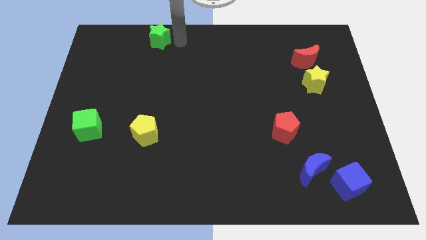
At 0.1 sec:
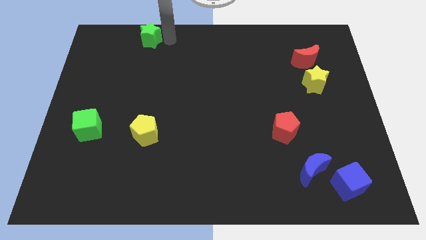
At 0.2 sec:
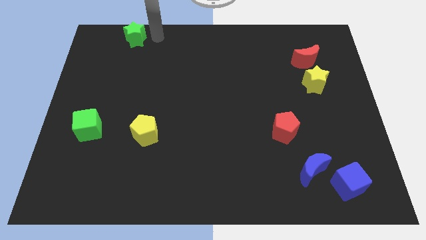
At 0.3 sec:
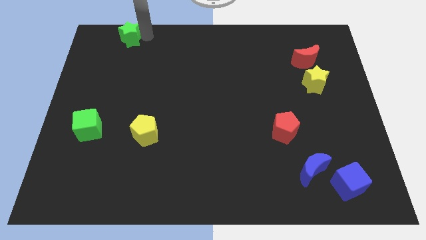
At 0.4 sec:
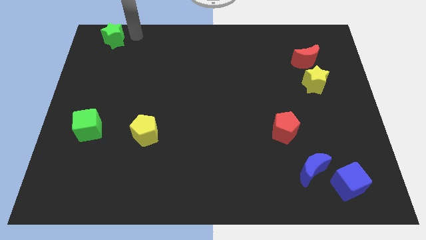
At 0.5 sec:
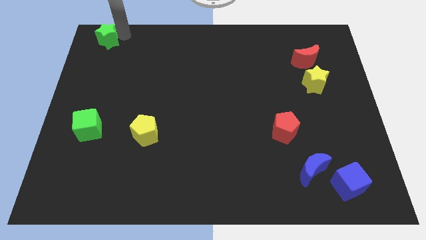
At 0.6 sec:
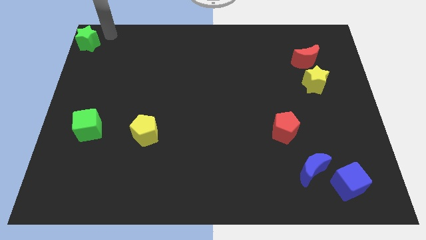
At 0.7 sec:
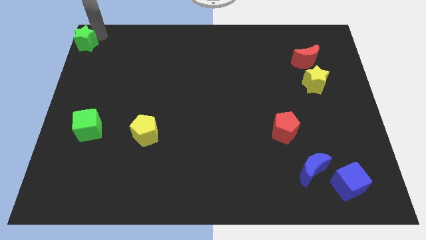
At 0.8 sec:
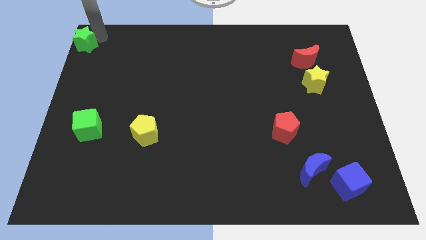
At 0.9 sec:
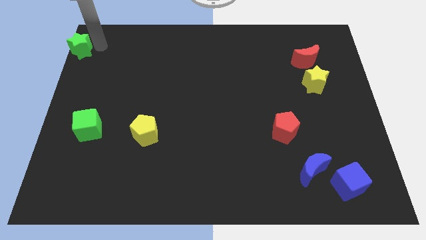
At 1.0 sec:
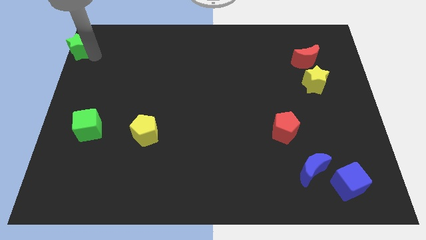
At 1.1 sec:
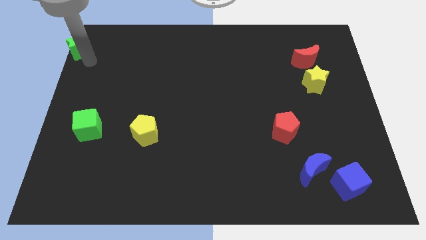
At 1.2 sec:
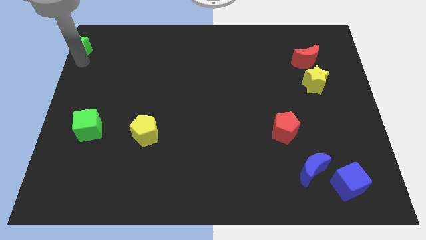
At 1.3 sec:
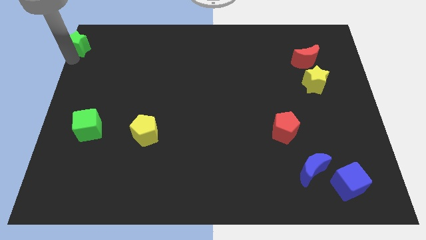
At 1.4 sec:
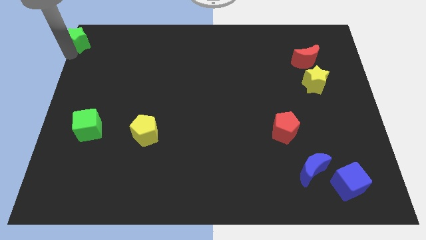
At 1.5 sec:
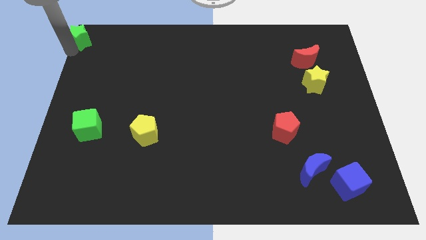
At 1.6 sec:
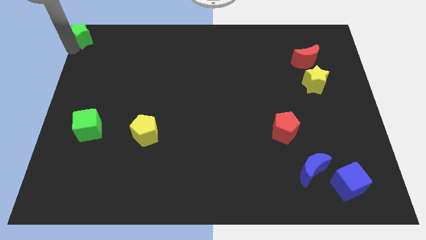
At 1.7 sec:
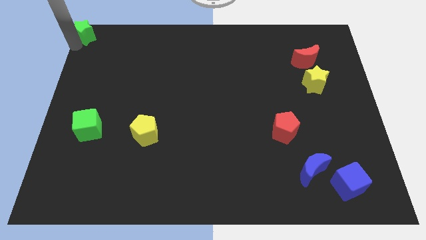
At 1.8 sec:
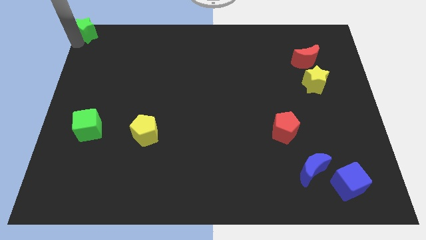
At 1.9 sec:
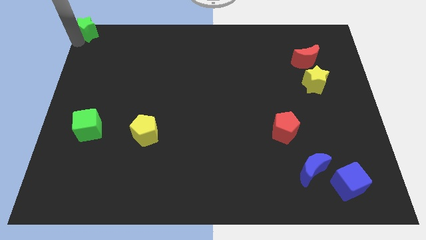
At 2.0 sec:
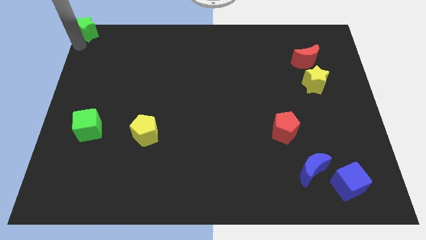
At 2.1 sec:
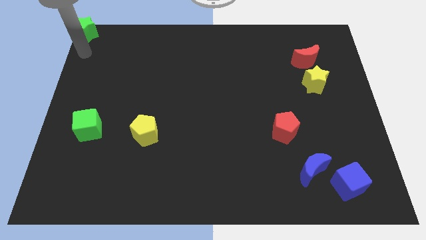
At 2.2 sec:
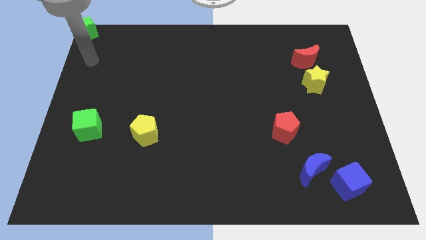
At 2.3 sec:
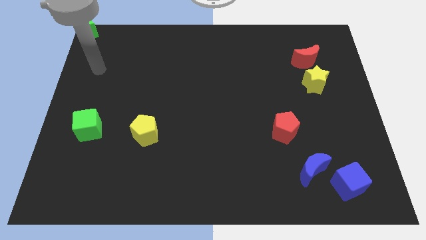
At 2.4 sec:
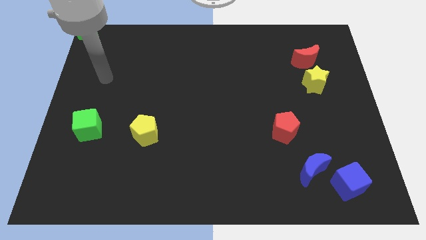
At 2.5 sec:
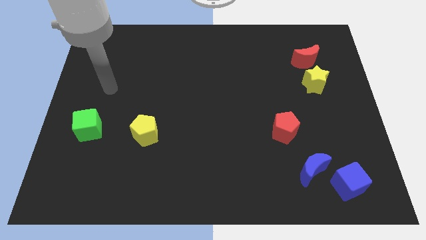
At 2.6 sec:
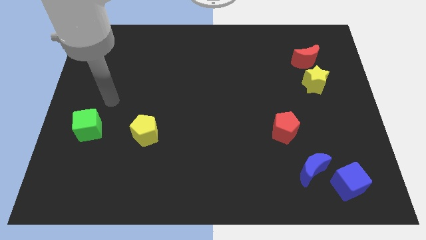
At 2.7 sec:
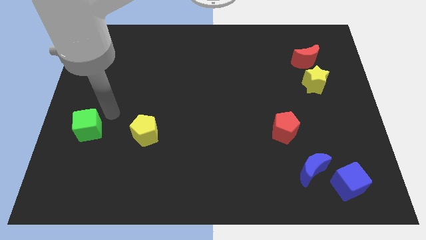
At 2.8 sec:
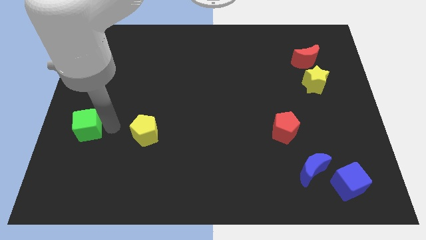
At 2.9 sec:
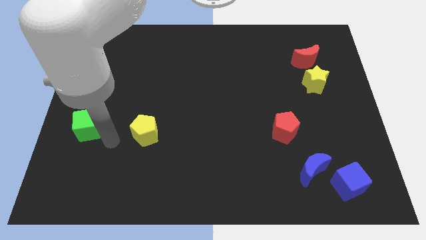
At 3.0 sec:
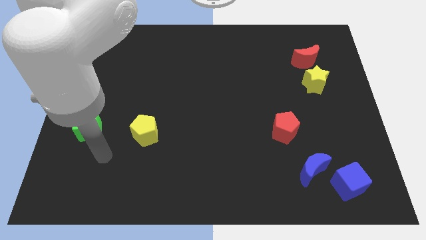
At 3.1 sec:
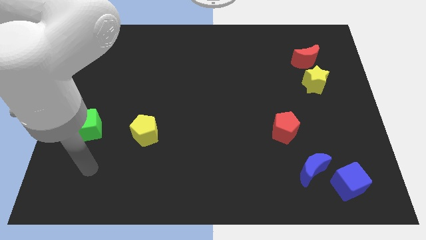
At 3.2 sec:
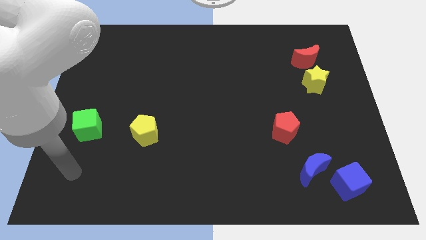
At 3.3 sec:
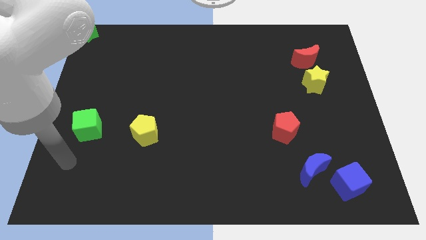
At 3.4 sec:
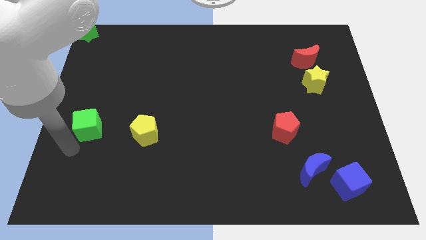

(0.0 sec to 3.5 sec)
move the green star diagonally top left to the yellow pentagon

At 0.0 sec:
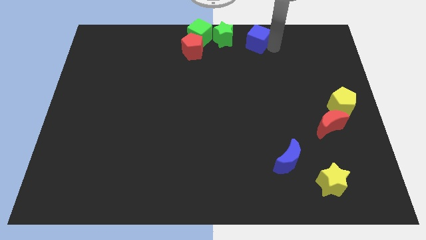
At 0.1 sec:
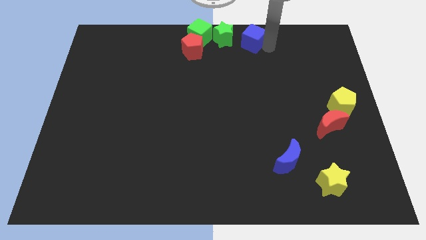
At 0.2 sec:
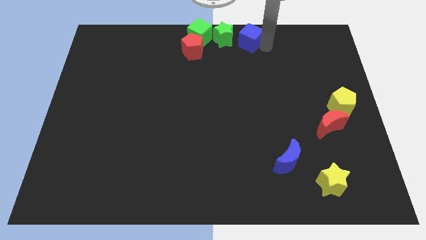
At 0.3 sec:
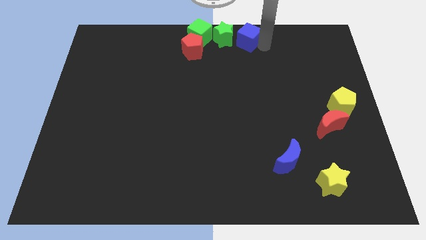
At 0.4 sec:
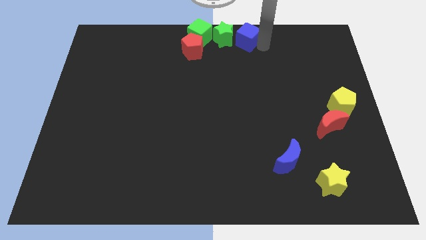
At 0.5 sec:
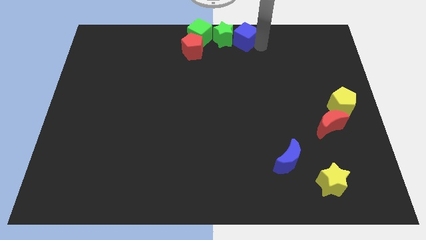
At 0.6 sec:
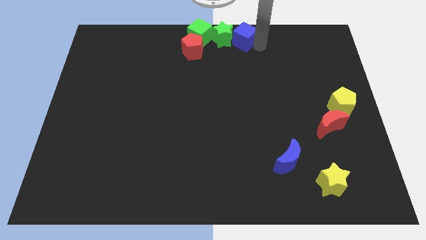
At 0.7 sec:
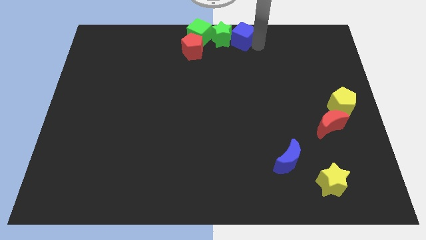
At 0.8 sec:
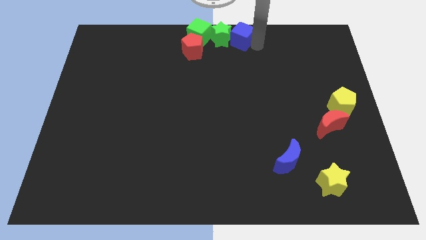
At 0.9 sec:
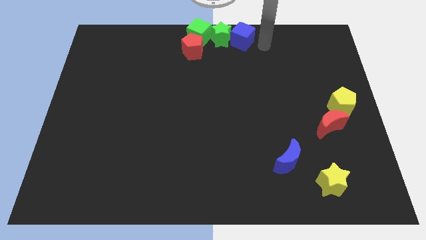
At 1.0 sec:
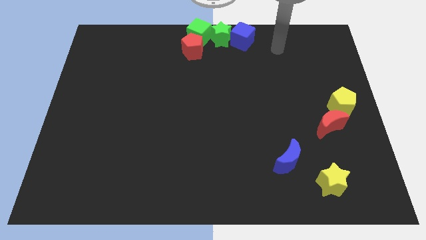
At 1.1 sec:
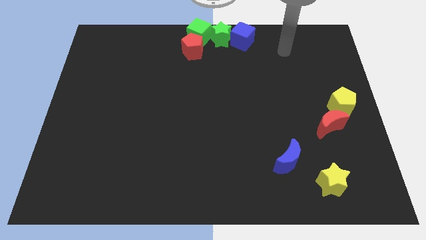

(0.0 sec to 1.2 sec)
move the blue cube to the right of the green star

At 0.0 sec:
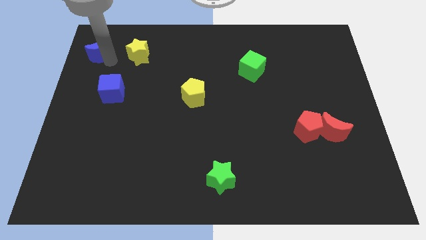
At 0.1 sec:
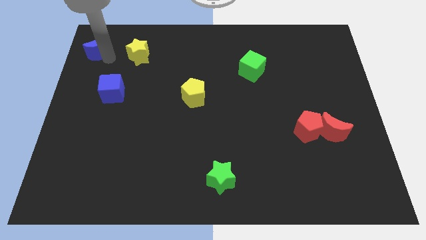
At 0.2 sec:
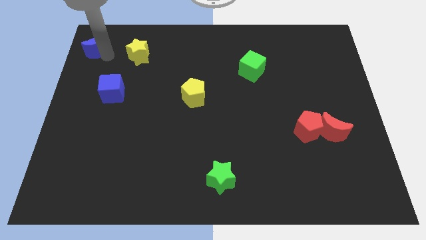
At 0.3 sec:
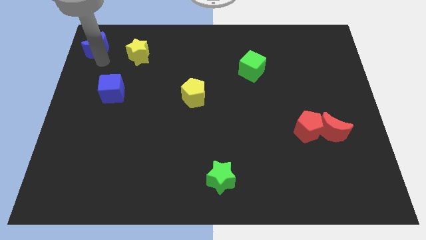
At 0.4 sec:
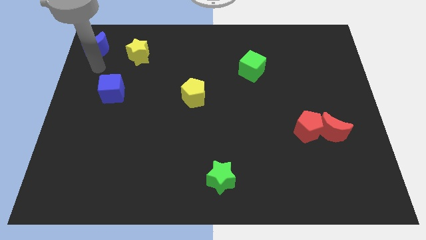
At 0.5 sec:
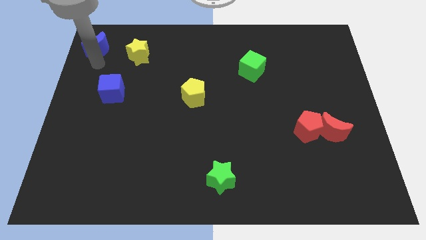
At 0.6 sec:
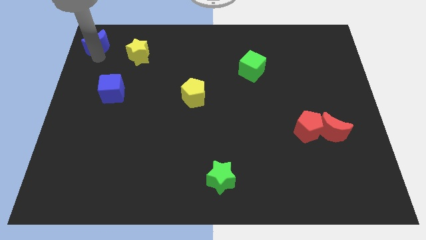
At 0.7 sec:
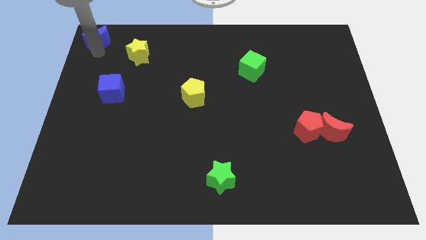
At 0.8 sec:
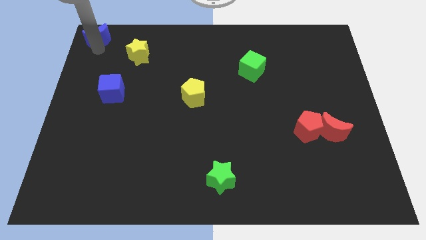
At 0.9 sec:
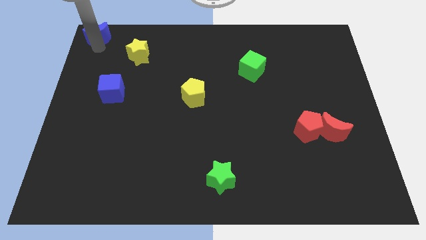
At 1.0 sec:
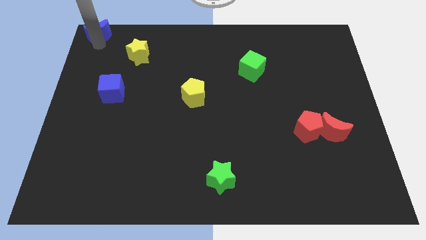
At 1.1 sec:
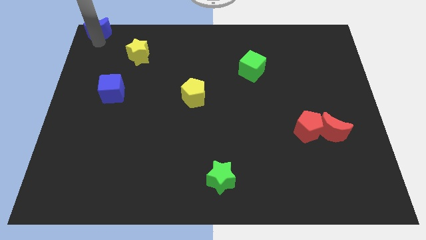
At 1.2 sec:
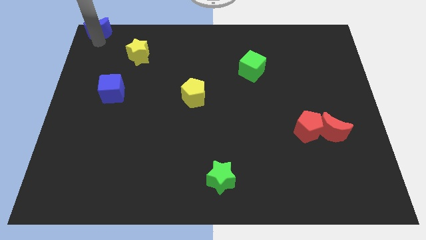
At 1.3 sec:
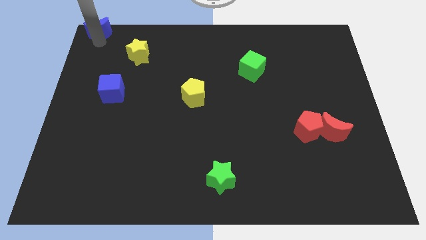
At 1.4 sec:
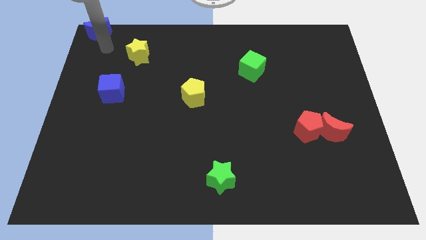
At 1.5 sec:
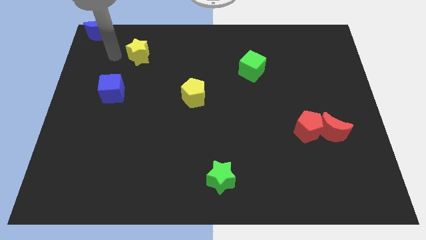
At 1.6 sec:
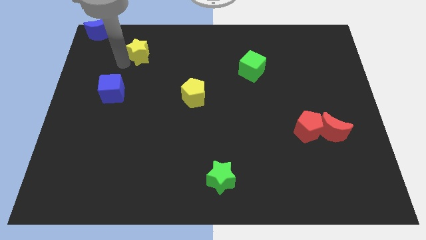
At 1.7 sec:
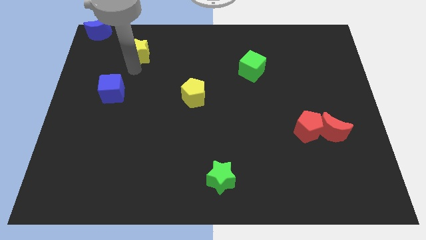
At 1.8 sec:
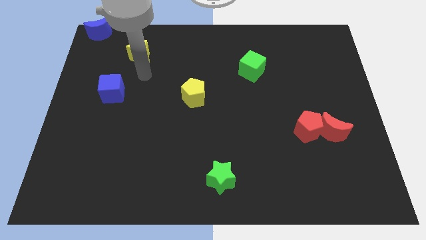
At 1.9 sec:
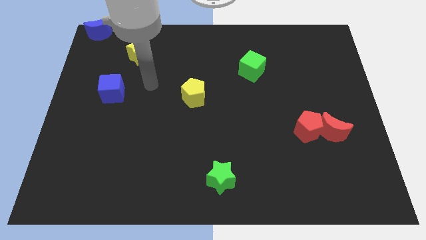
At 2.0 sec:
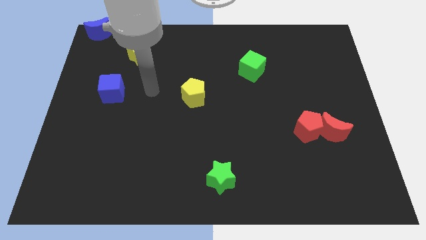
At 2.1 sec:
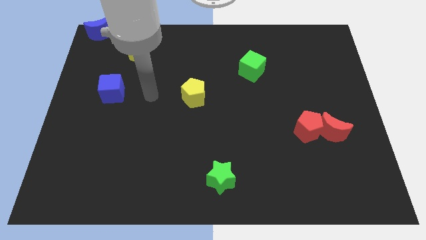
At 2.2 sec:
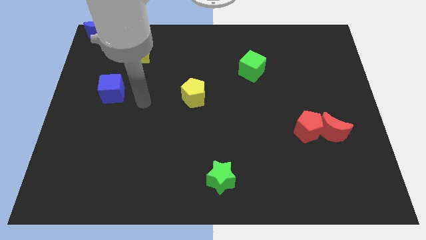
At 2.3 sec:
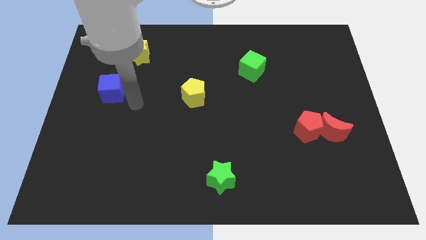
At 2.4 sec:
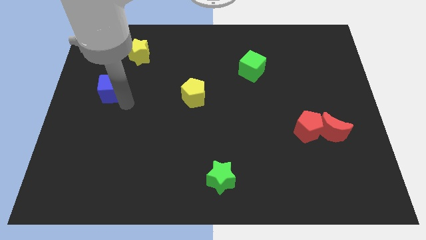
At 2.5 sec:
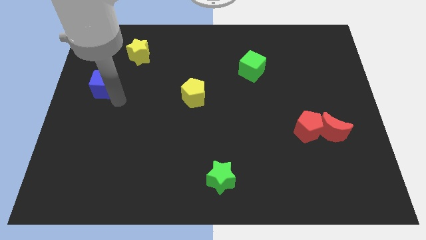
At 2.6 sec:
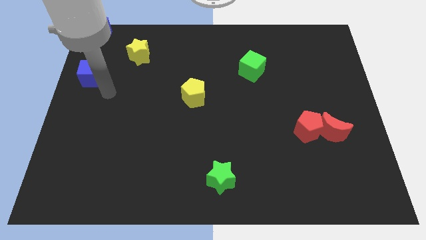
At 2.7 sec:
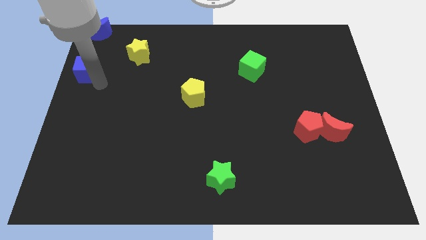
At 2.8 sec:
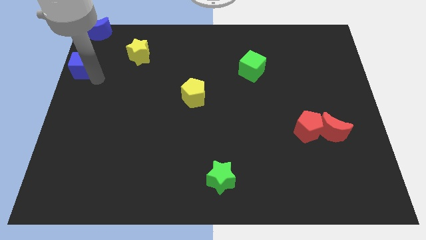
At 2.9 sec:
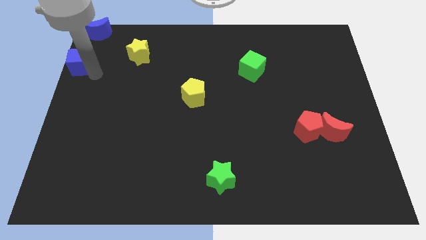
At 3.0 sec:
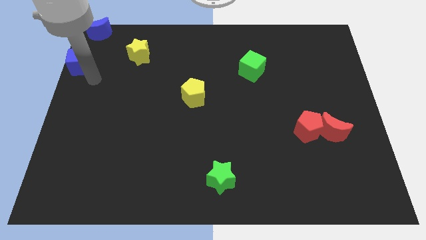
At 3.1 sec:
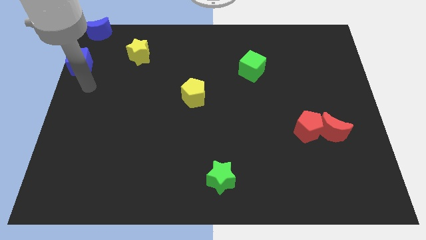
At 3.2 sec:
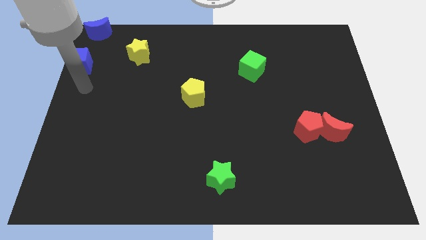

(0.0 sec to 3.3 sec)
make a triangle out of blue blocks and the yellow star

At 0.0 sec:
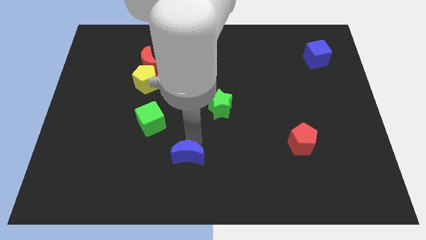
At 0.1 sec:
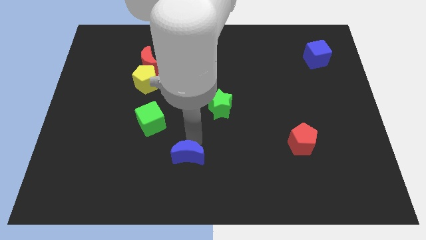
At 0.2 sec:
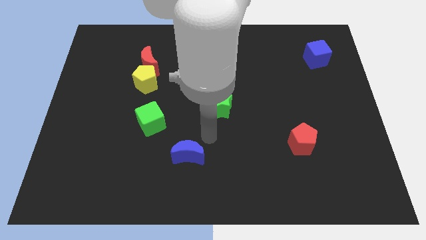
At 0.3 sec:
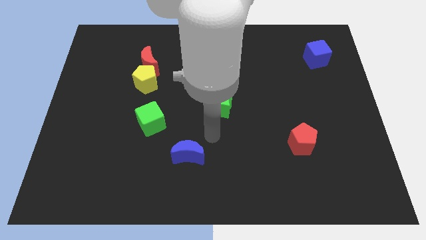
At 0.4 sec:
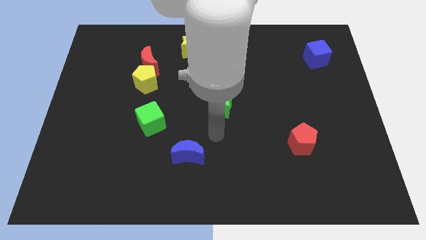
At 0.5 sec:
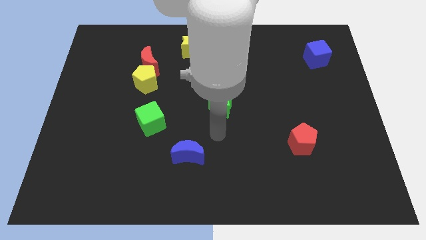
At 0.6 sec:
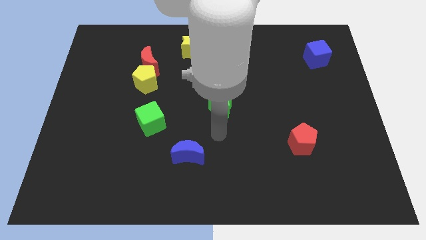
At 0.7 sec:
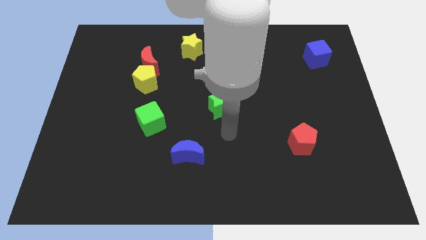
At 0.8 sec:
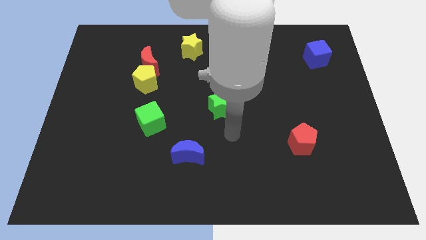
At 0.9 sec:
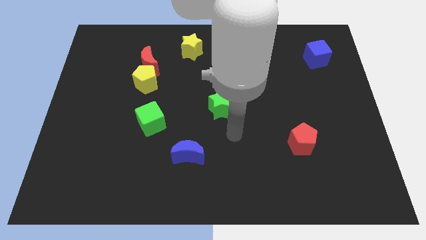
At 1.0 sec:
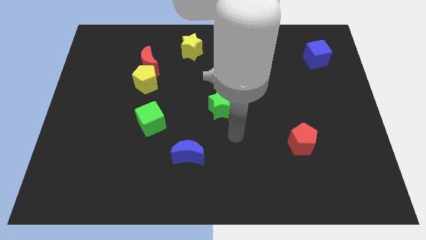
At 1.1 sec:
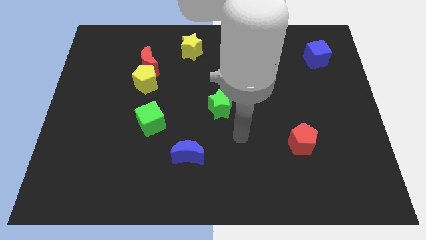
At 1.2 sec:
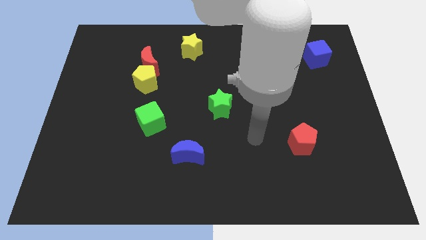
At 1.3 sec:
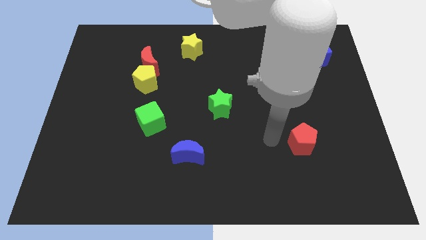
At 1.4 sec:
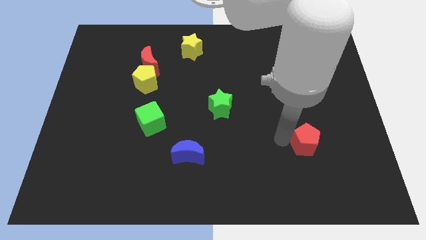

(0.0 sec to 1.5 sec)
move the arm away from the blue moon
